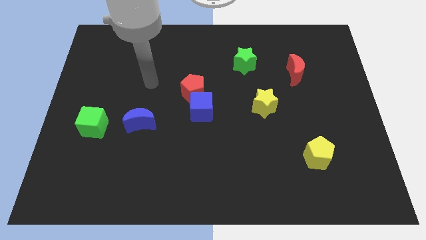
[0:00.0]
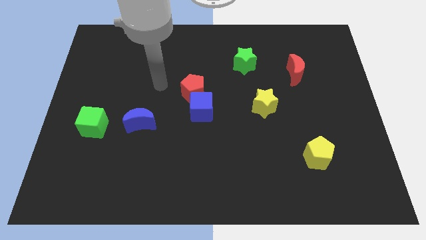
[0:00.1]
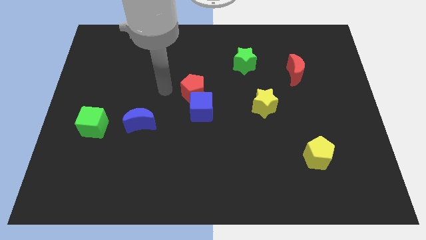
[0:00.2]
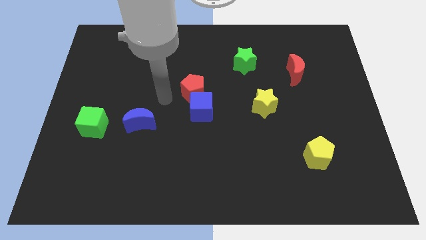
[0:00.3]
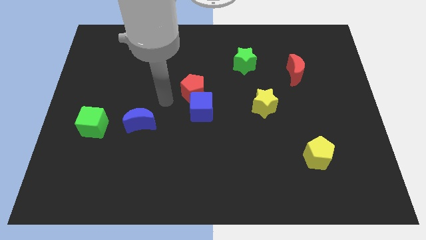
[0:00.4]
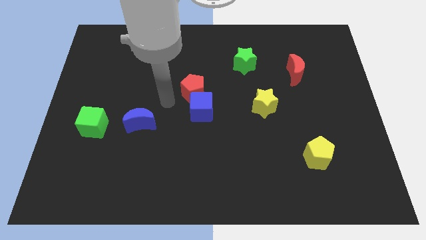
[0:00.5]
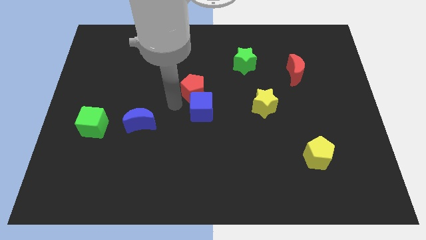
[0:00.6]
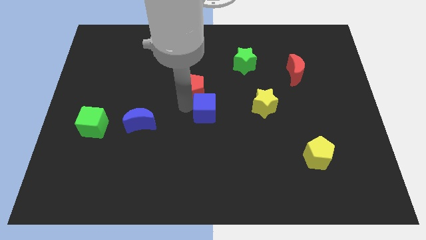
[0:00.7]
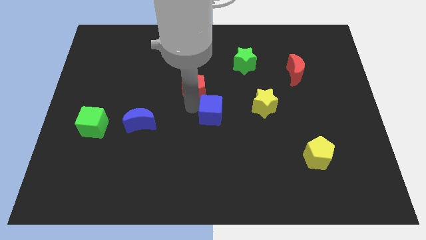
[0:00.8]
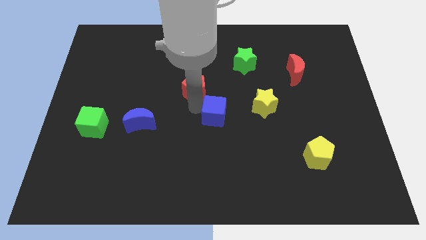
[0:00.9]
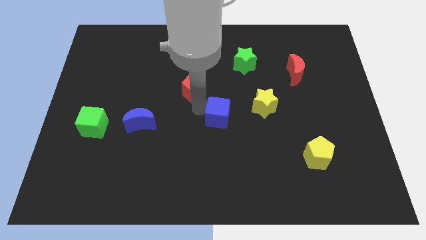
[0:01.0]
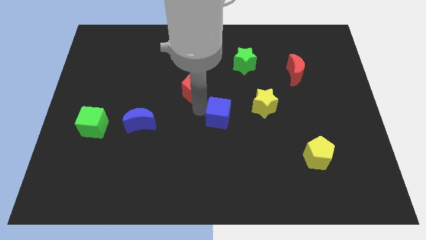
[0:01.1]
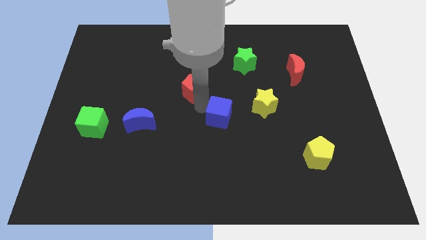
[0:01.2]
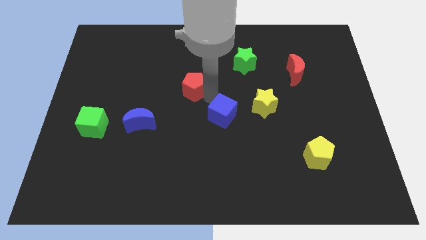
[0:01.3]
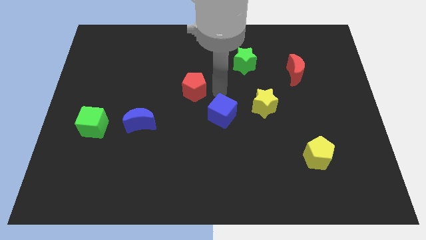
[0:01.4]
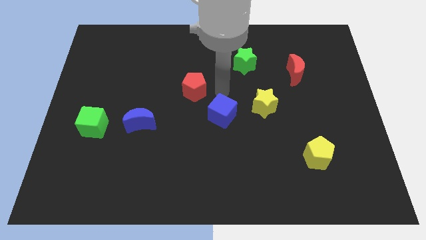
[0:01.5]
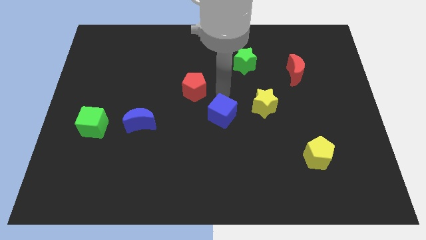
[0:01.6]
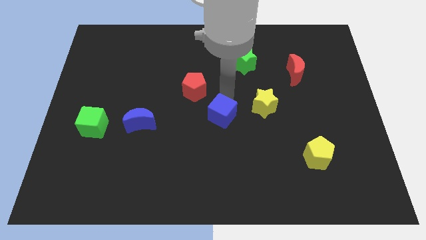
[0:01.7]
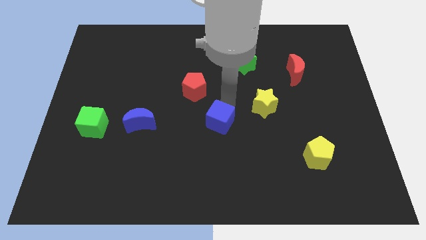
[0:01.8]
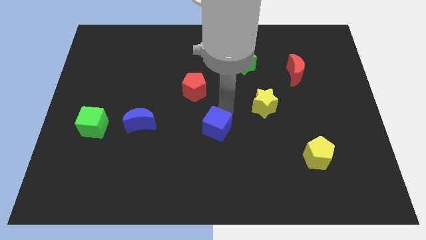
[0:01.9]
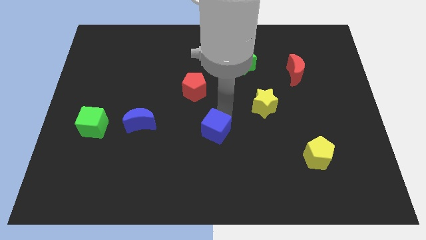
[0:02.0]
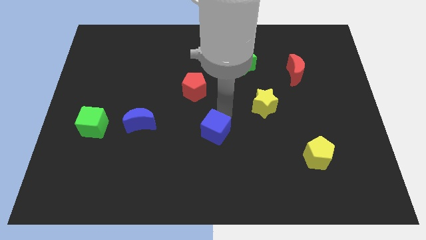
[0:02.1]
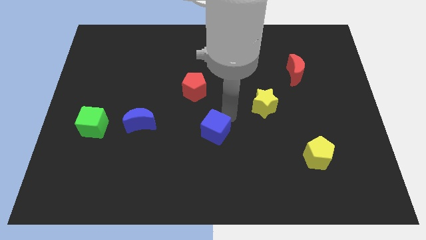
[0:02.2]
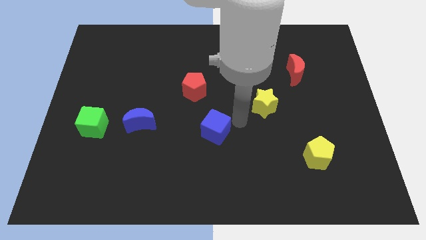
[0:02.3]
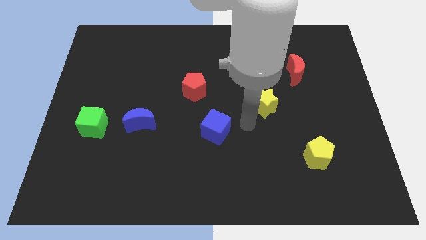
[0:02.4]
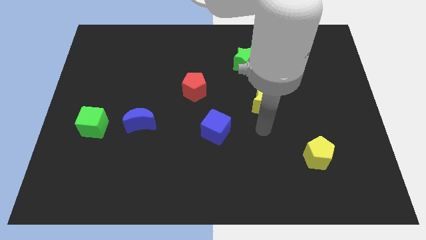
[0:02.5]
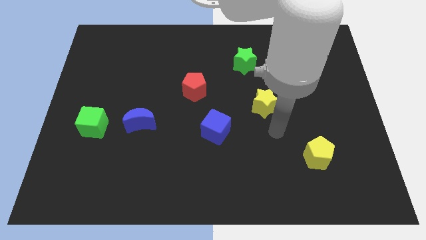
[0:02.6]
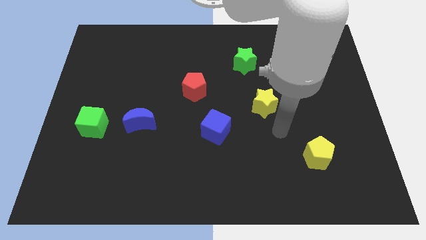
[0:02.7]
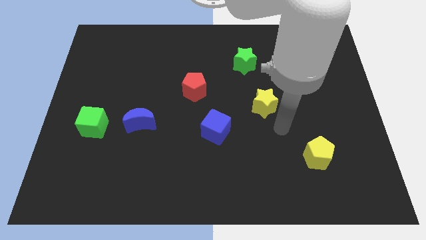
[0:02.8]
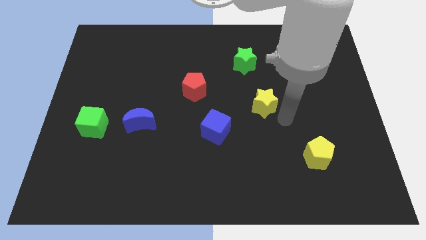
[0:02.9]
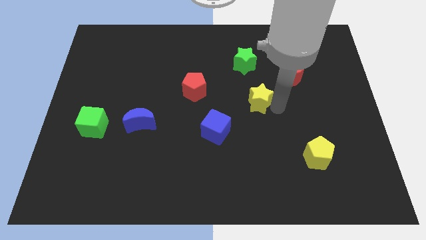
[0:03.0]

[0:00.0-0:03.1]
move the blue cube towards the center of the board

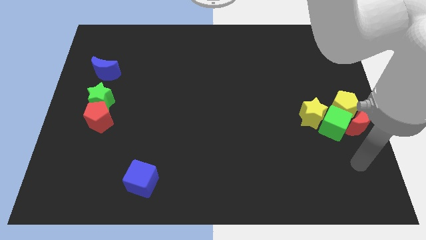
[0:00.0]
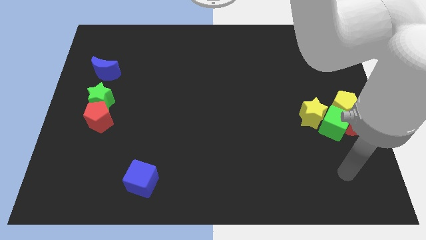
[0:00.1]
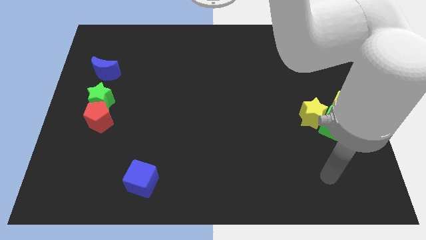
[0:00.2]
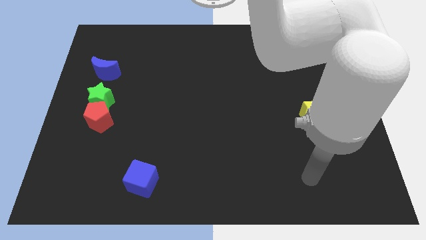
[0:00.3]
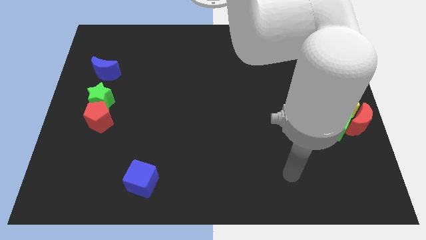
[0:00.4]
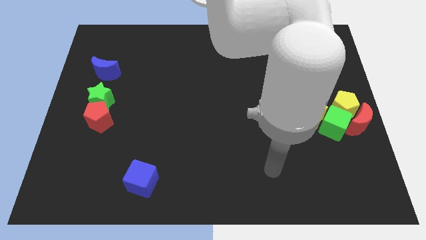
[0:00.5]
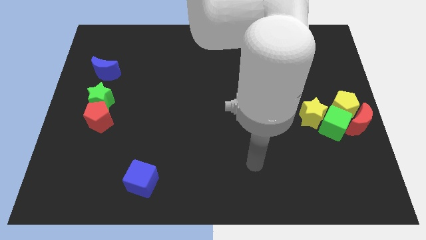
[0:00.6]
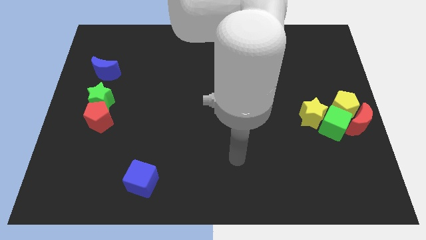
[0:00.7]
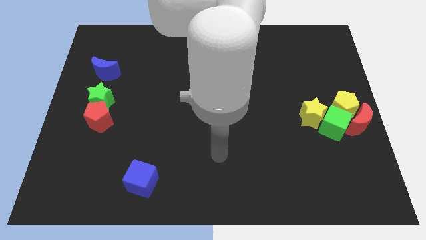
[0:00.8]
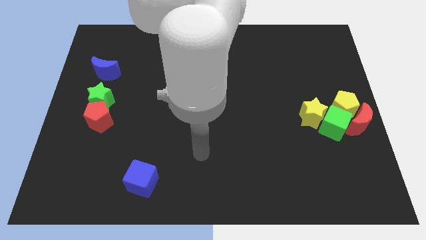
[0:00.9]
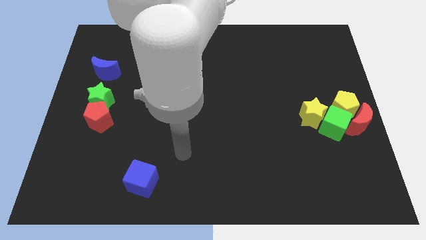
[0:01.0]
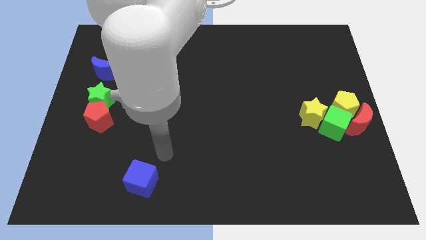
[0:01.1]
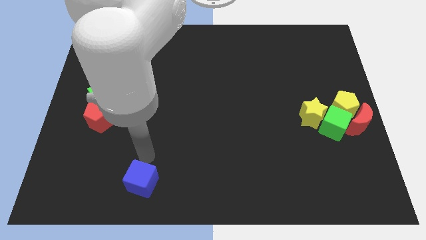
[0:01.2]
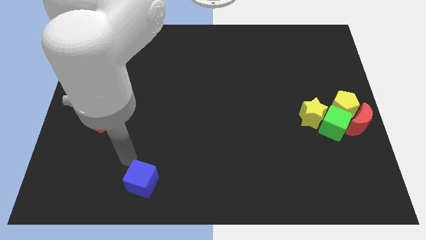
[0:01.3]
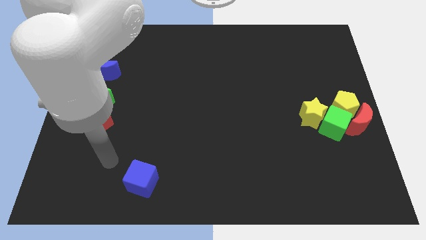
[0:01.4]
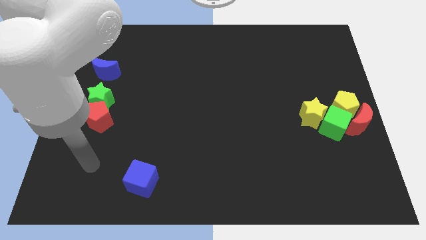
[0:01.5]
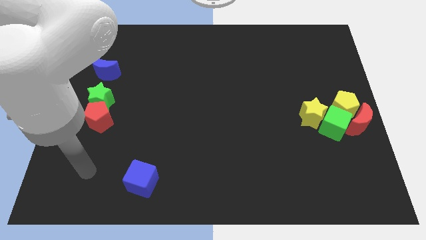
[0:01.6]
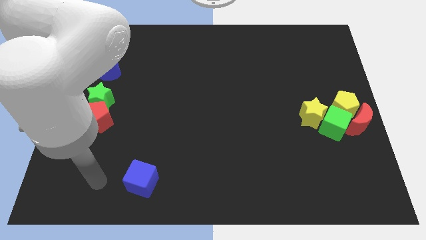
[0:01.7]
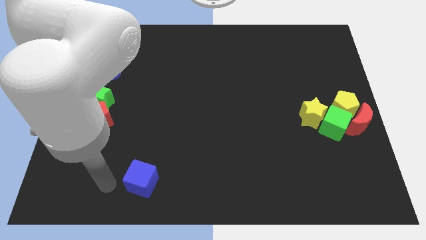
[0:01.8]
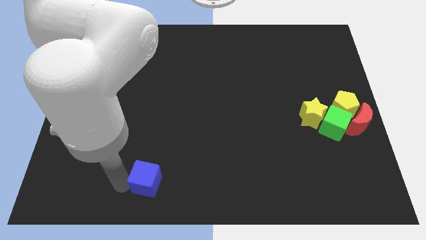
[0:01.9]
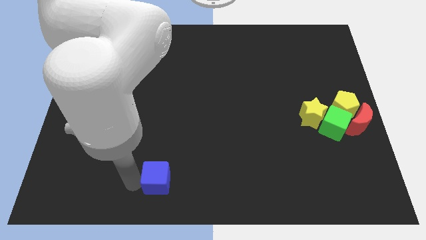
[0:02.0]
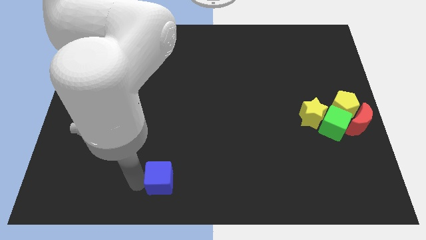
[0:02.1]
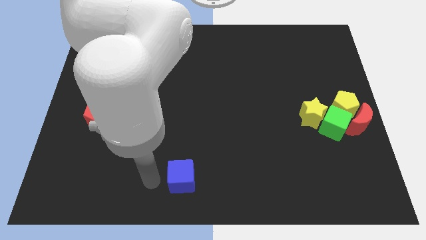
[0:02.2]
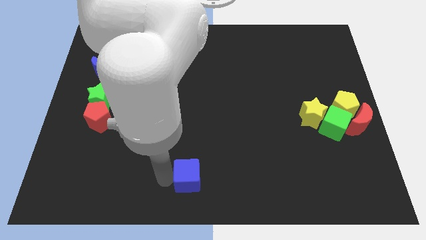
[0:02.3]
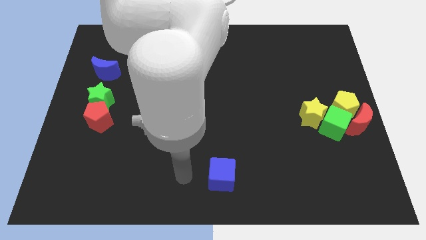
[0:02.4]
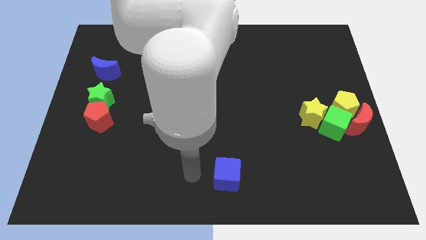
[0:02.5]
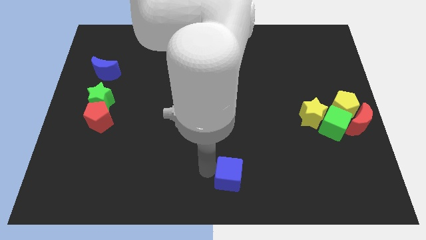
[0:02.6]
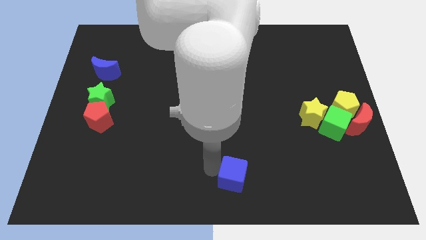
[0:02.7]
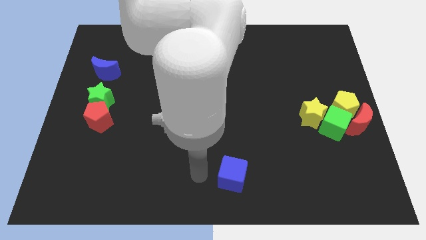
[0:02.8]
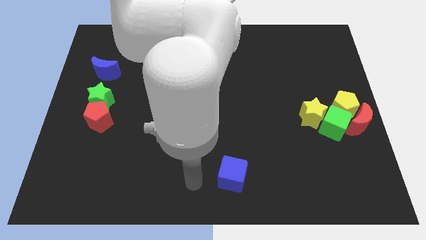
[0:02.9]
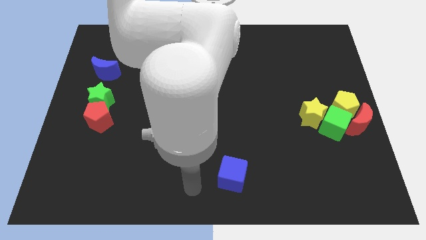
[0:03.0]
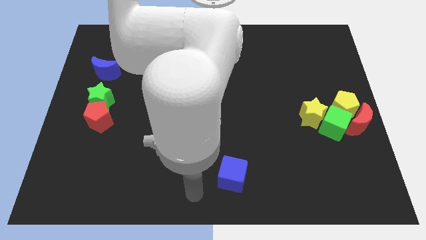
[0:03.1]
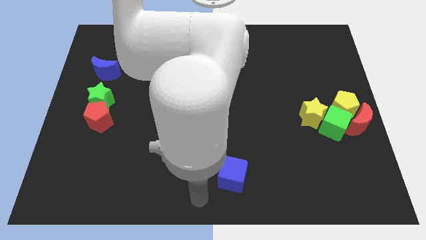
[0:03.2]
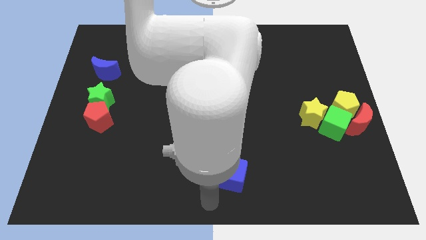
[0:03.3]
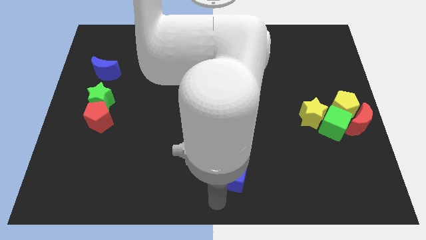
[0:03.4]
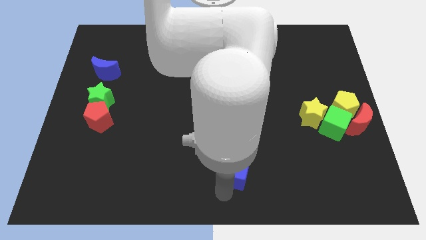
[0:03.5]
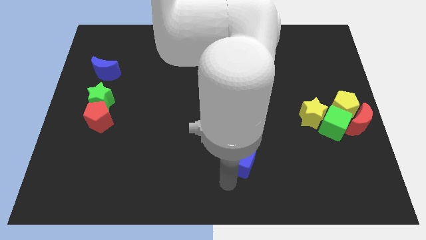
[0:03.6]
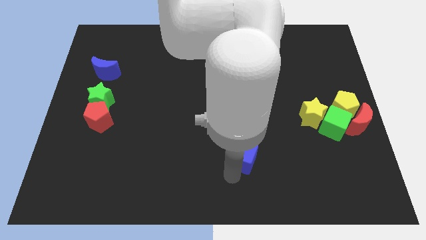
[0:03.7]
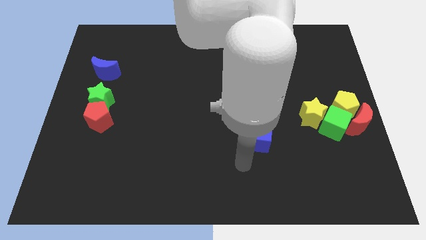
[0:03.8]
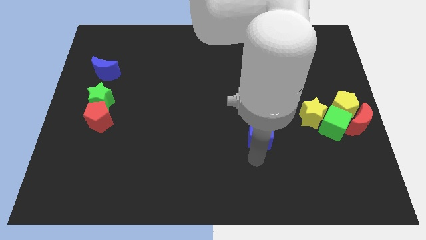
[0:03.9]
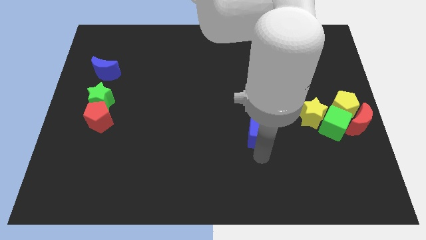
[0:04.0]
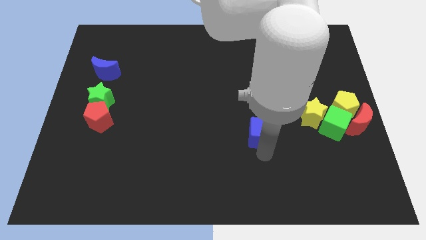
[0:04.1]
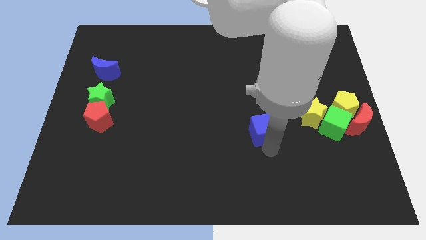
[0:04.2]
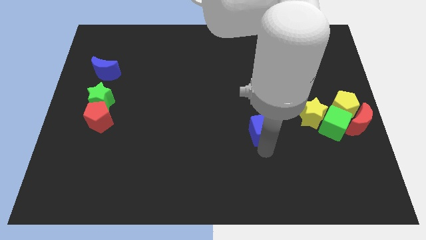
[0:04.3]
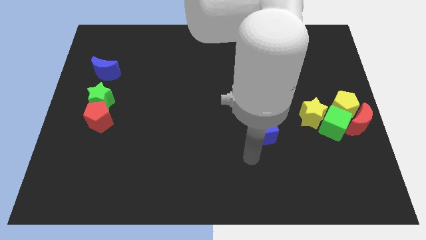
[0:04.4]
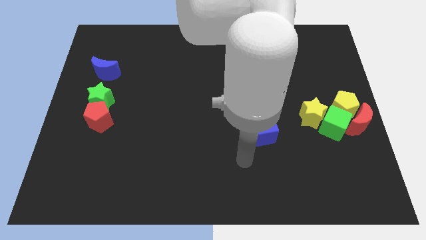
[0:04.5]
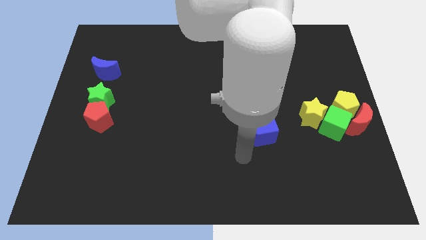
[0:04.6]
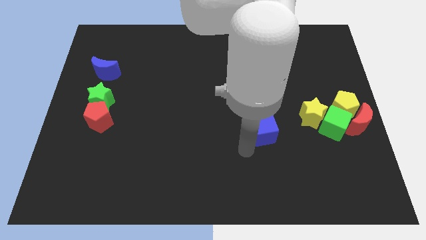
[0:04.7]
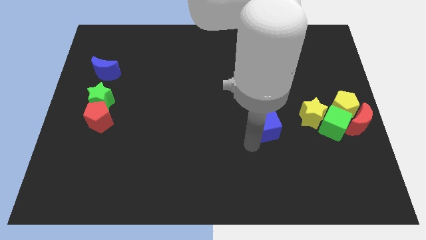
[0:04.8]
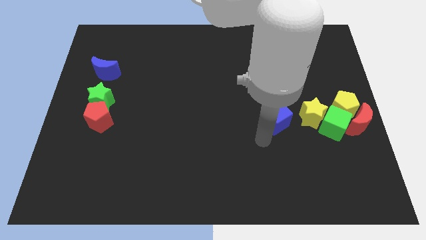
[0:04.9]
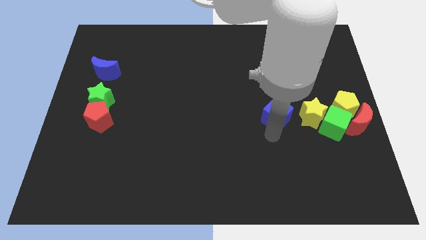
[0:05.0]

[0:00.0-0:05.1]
place the blue cube to the left of the yellow star

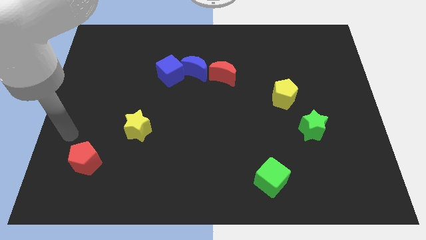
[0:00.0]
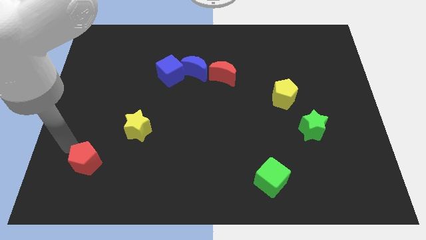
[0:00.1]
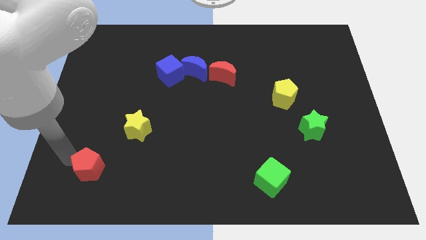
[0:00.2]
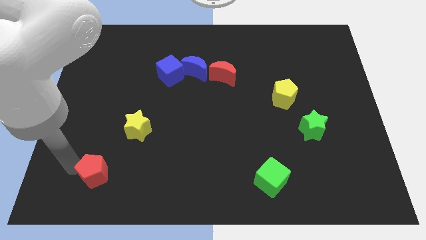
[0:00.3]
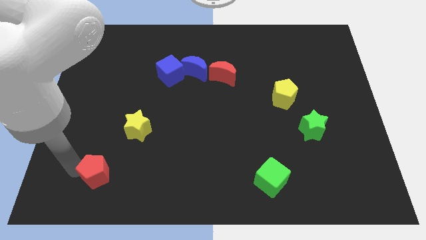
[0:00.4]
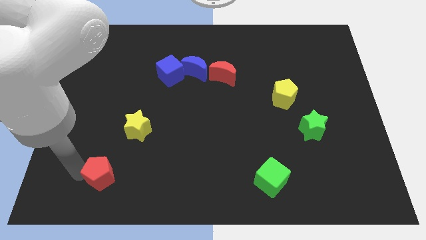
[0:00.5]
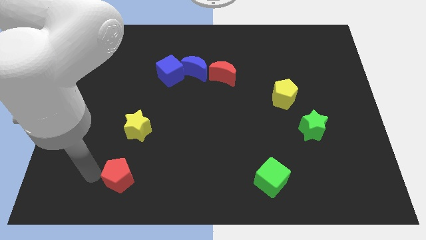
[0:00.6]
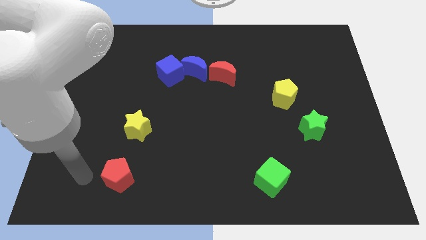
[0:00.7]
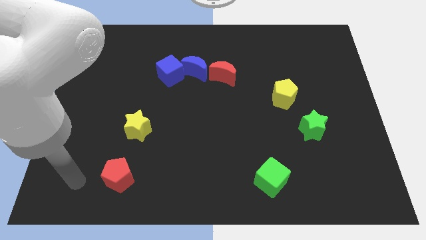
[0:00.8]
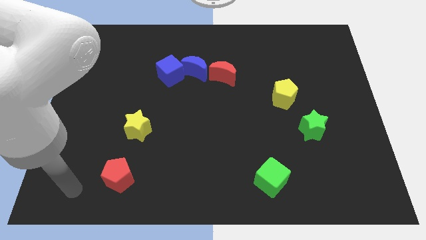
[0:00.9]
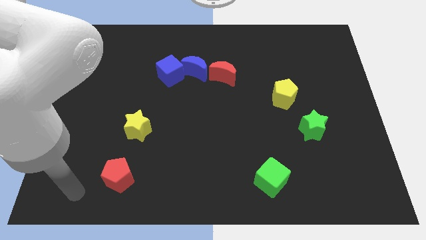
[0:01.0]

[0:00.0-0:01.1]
slide the red pentagon to the left of the green cube
